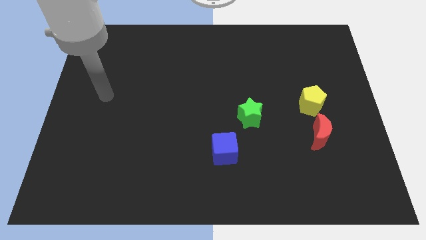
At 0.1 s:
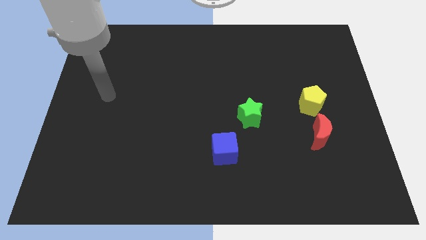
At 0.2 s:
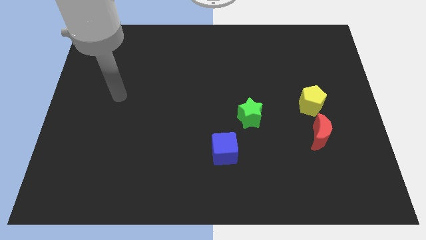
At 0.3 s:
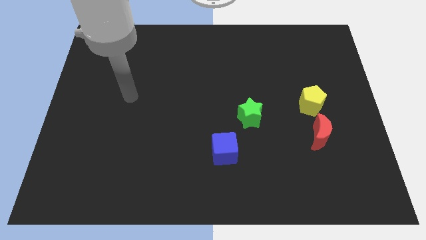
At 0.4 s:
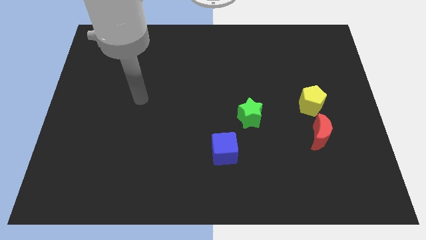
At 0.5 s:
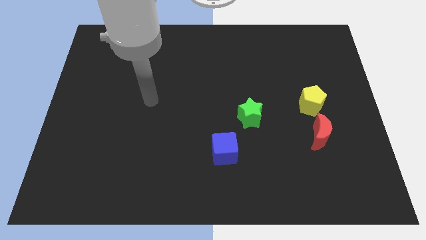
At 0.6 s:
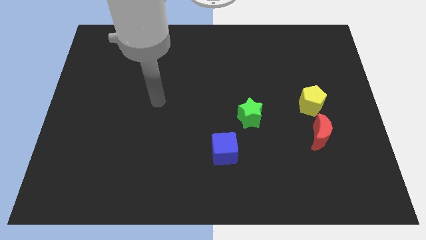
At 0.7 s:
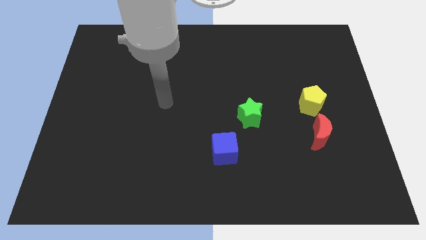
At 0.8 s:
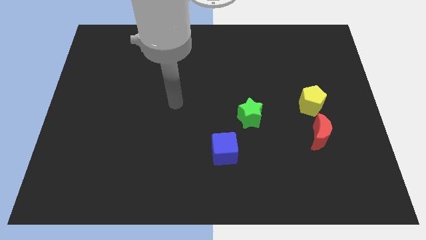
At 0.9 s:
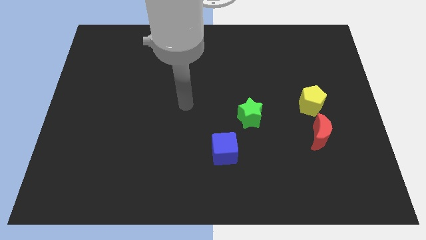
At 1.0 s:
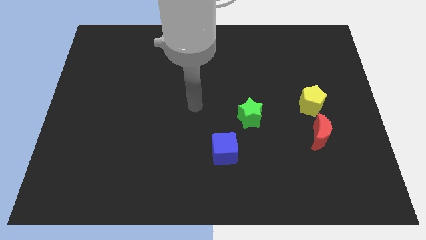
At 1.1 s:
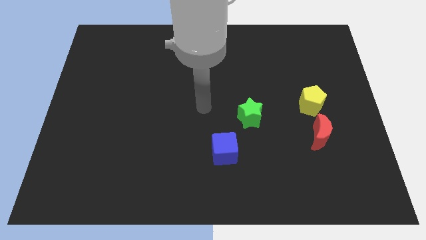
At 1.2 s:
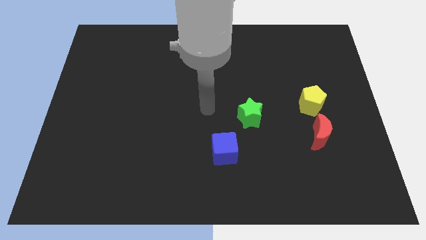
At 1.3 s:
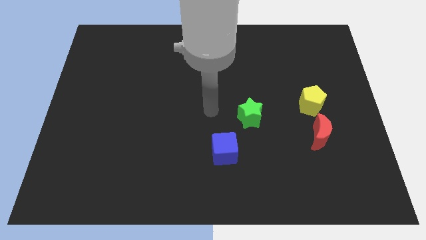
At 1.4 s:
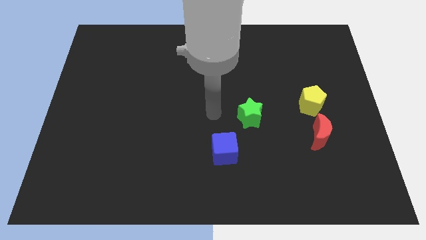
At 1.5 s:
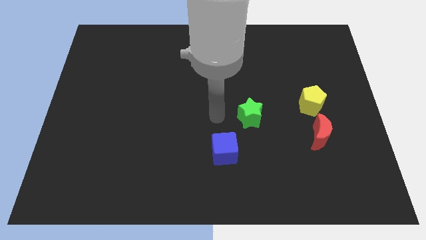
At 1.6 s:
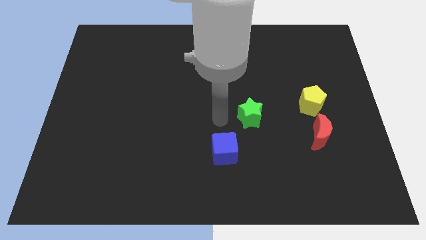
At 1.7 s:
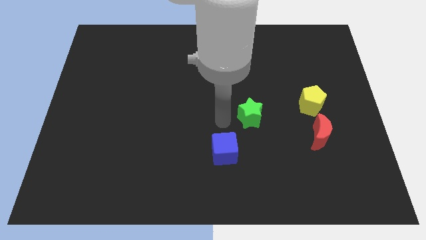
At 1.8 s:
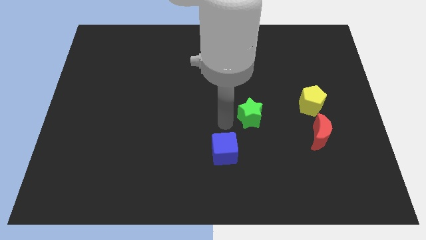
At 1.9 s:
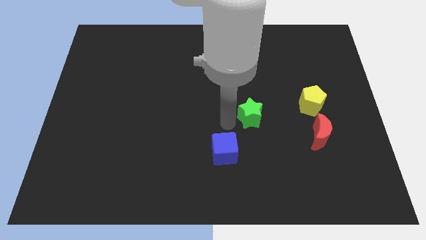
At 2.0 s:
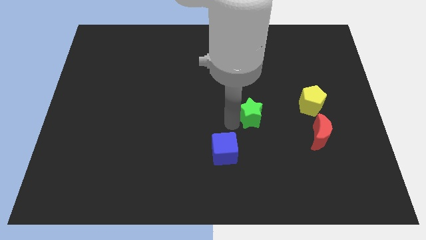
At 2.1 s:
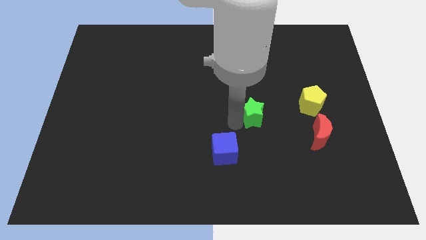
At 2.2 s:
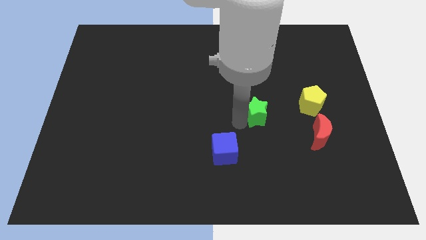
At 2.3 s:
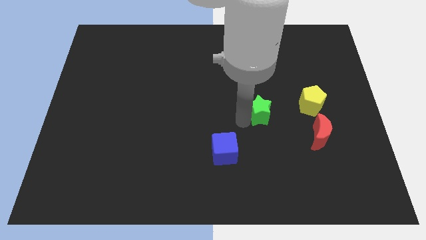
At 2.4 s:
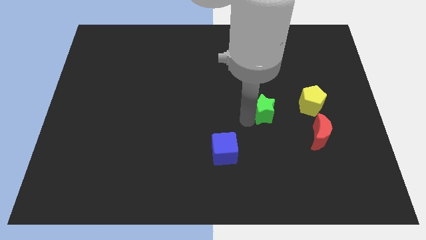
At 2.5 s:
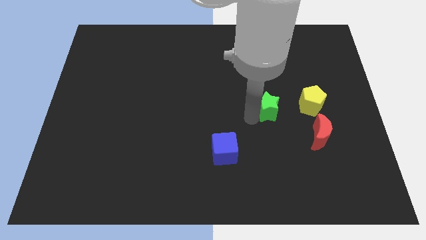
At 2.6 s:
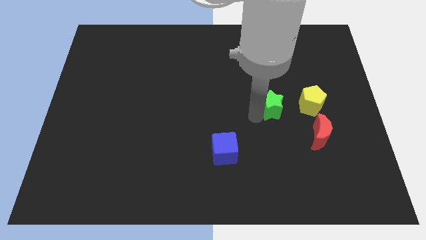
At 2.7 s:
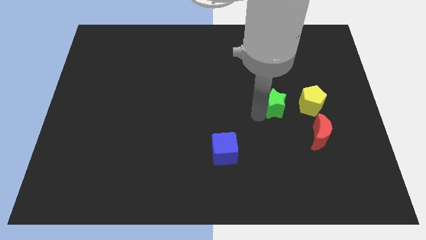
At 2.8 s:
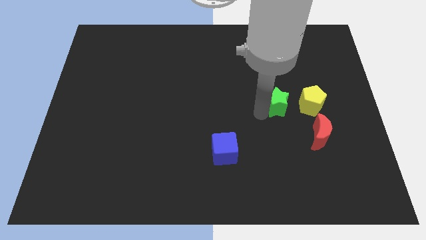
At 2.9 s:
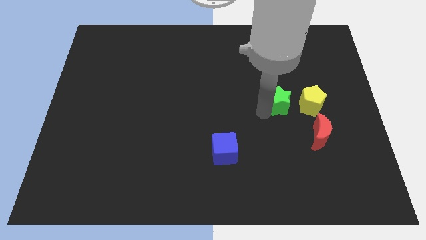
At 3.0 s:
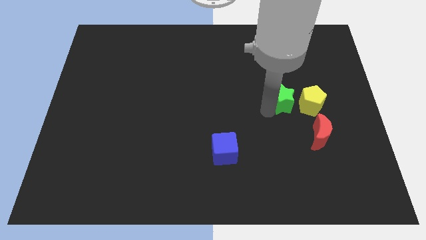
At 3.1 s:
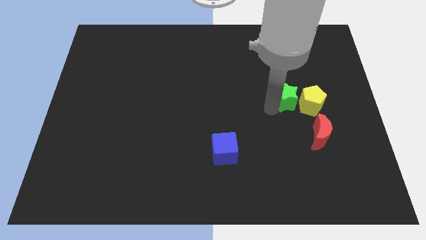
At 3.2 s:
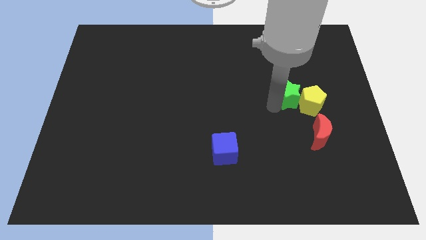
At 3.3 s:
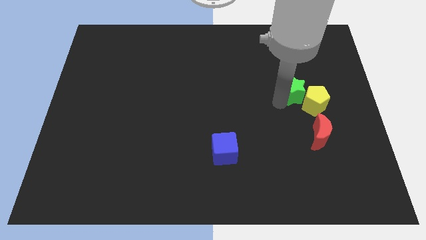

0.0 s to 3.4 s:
push the green block towards the pentagon

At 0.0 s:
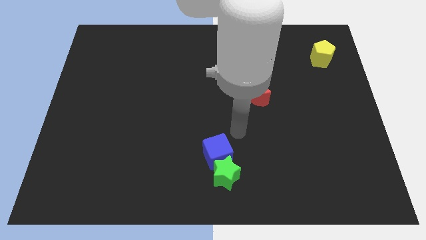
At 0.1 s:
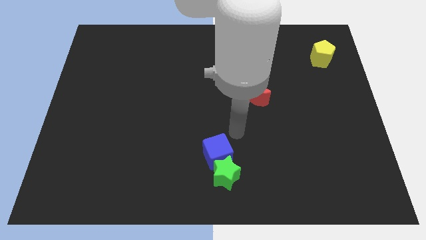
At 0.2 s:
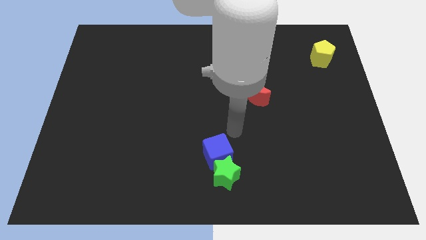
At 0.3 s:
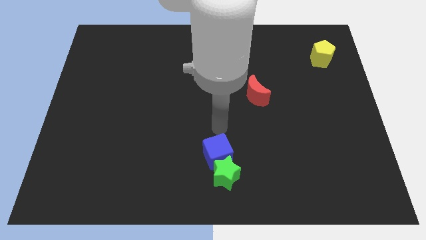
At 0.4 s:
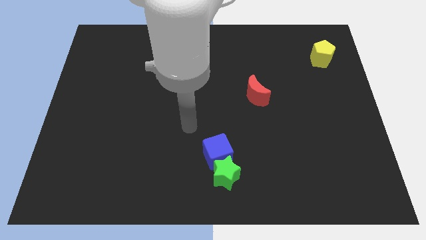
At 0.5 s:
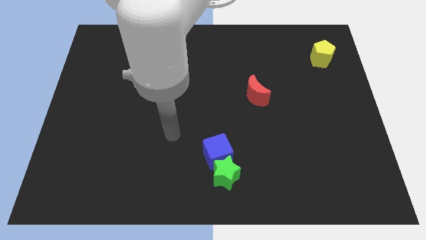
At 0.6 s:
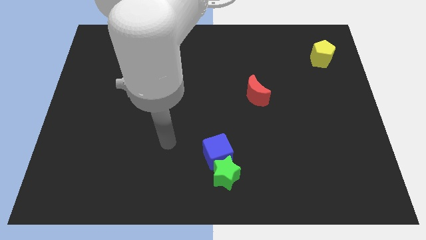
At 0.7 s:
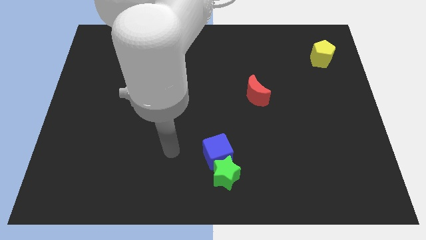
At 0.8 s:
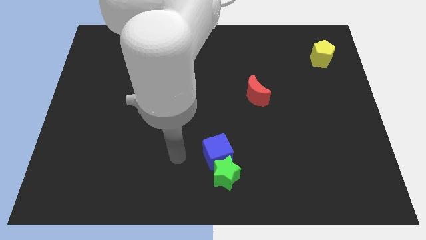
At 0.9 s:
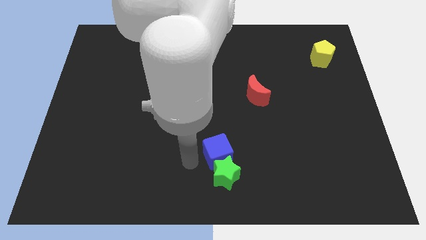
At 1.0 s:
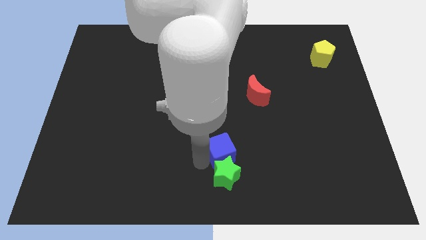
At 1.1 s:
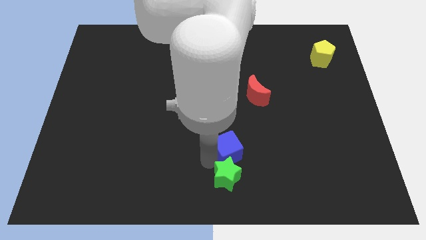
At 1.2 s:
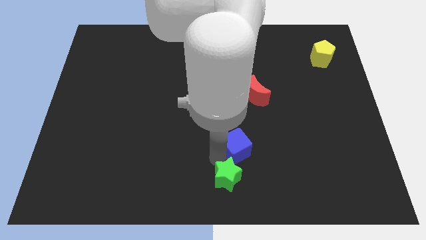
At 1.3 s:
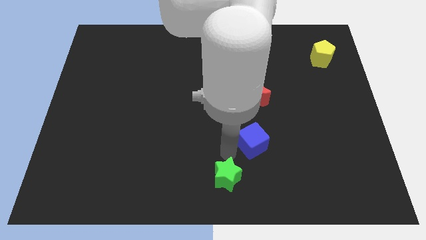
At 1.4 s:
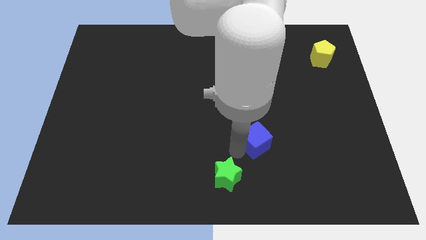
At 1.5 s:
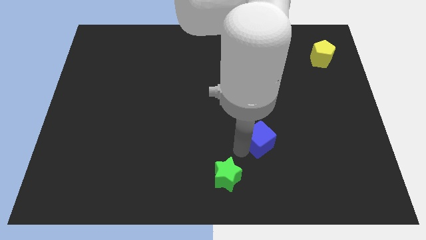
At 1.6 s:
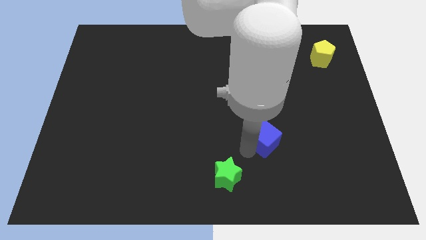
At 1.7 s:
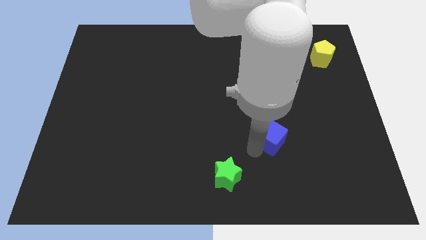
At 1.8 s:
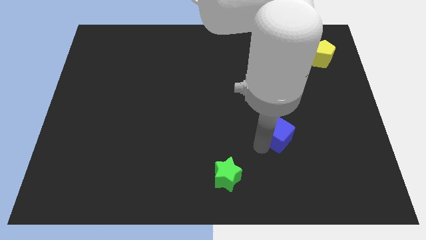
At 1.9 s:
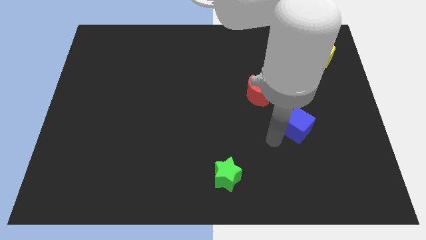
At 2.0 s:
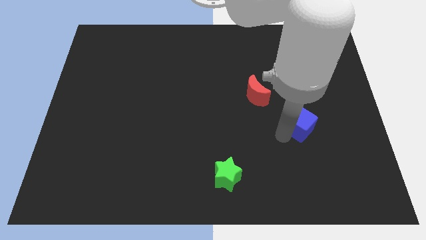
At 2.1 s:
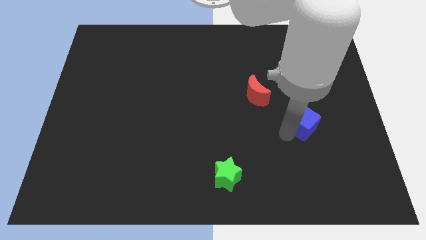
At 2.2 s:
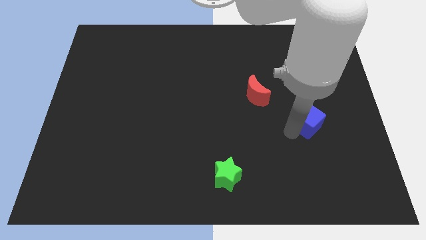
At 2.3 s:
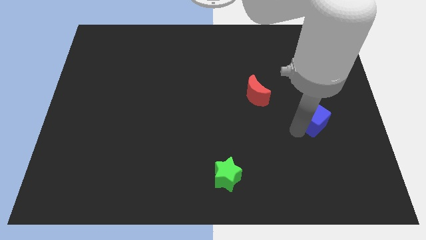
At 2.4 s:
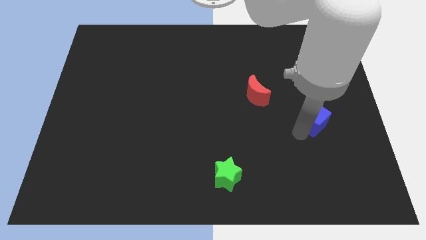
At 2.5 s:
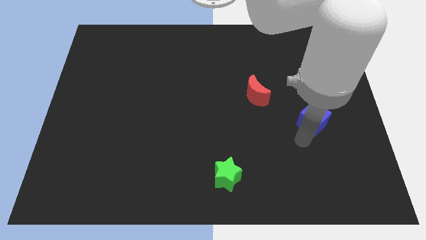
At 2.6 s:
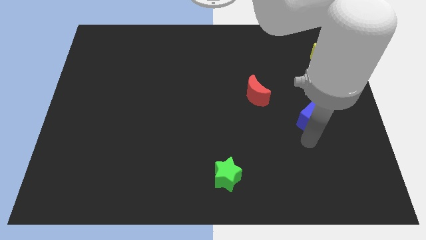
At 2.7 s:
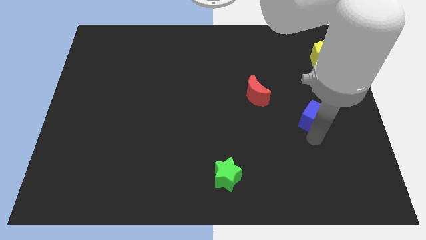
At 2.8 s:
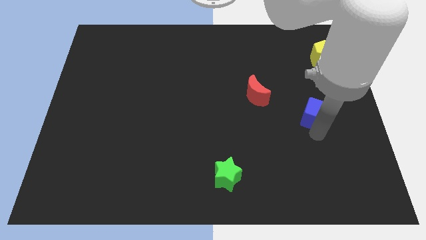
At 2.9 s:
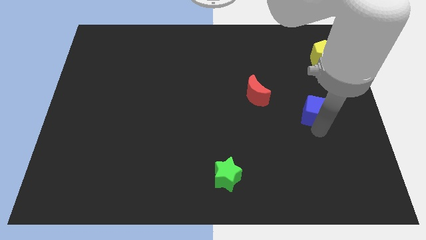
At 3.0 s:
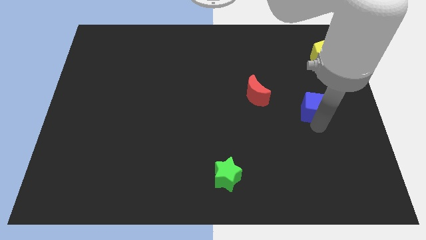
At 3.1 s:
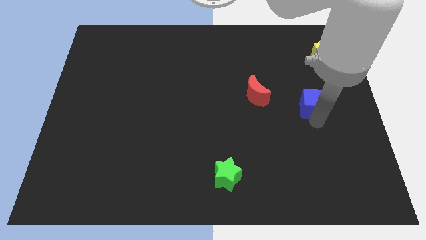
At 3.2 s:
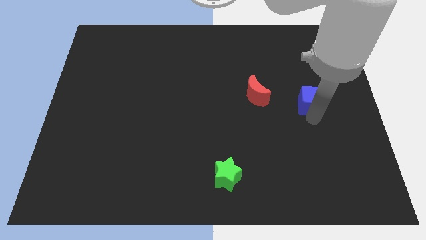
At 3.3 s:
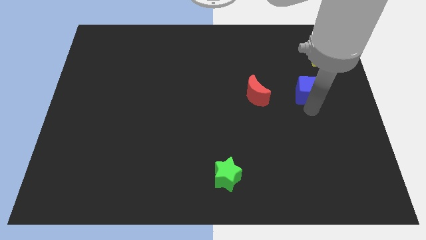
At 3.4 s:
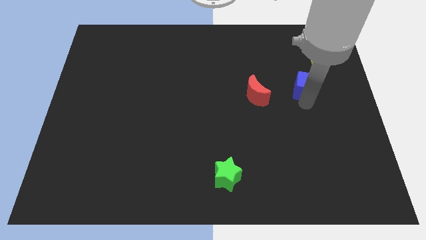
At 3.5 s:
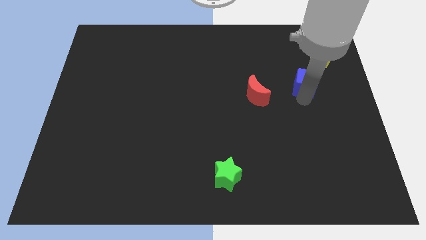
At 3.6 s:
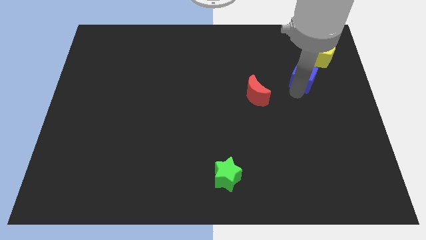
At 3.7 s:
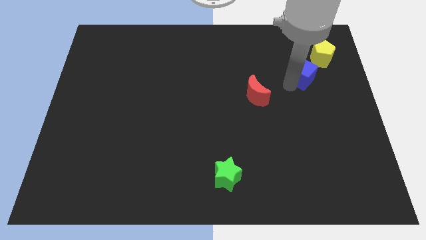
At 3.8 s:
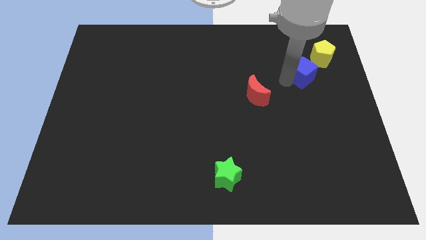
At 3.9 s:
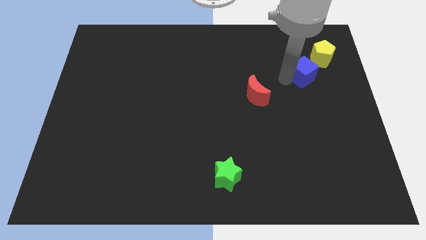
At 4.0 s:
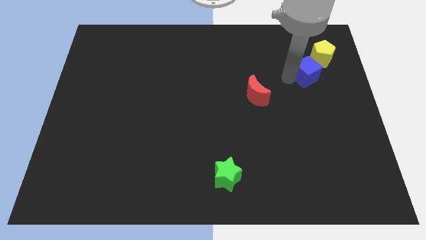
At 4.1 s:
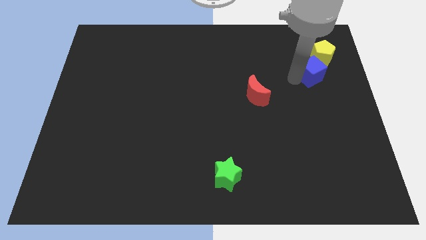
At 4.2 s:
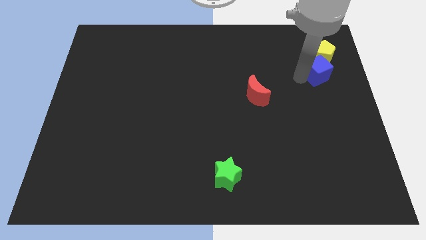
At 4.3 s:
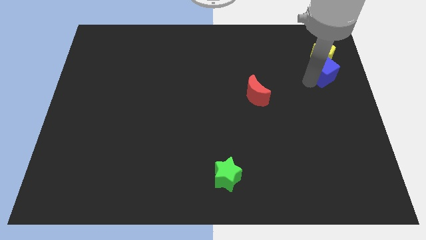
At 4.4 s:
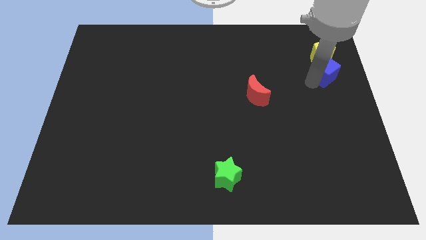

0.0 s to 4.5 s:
push the blue block next to the yellow block

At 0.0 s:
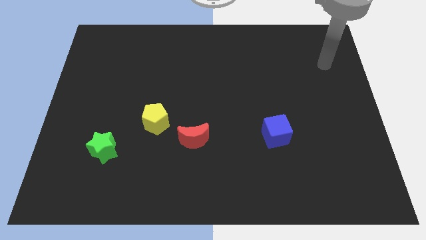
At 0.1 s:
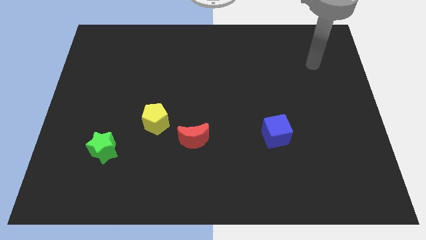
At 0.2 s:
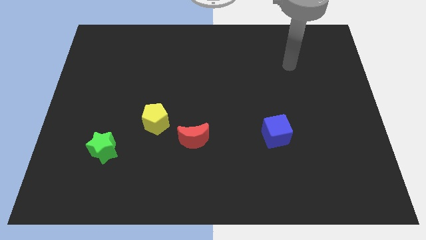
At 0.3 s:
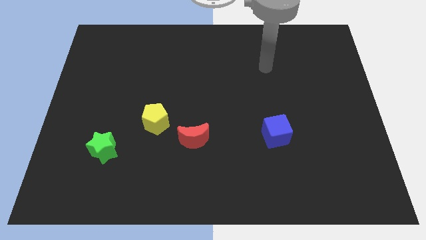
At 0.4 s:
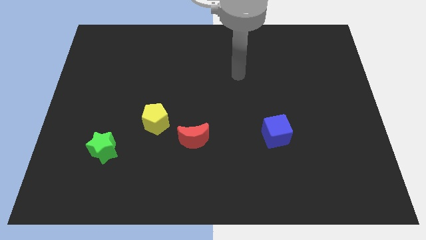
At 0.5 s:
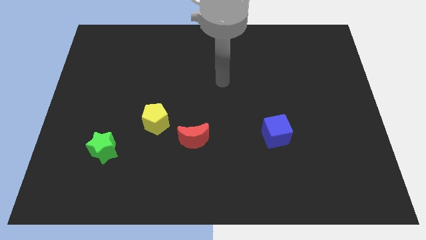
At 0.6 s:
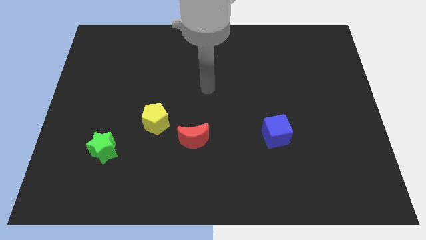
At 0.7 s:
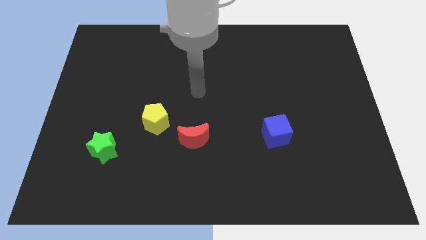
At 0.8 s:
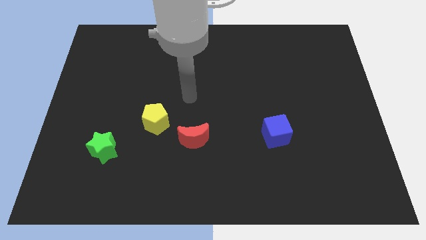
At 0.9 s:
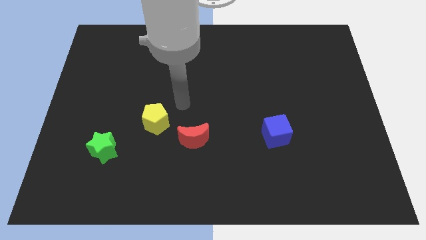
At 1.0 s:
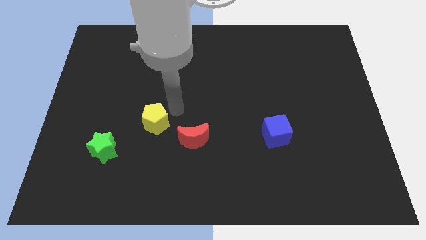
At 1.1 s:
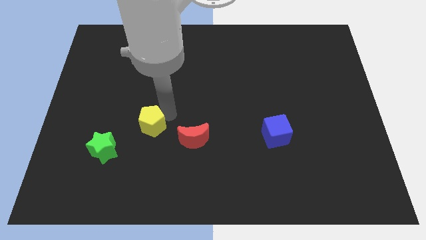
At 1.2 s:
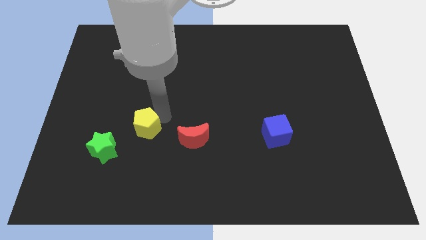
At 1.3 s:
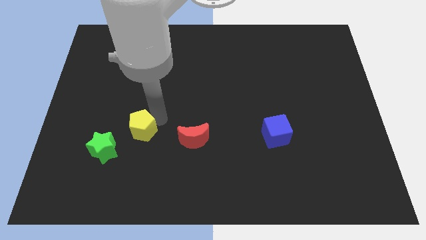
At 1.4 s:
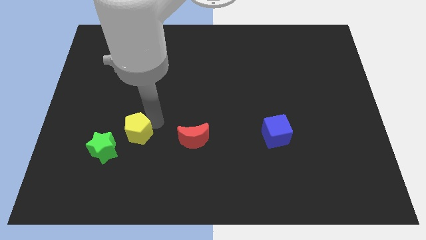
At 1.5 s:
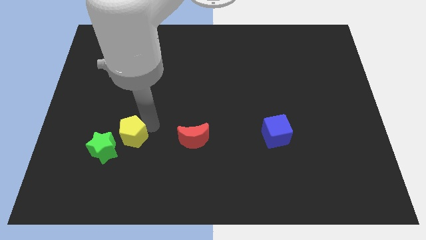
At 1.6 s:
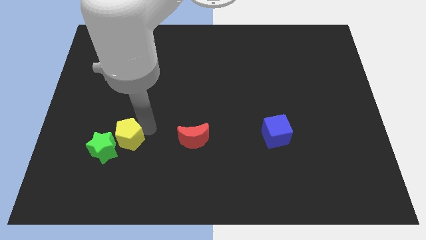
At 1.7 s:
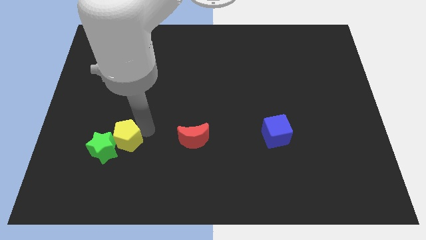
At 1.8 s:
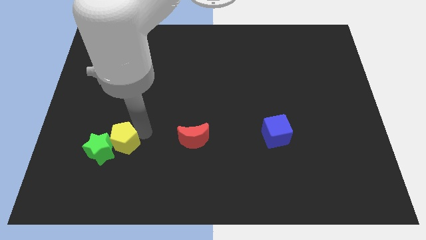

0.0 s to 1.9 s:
push the pentagon next to the green star
